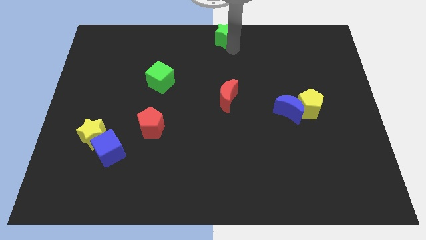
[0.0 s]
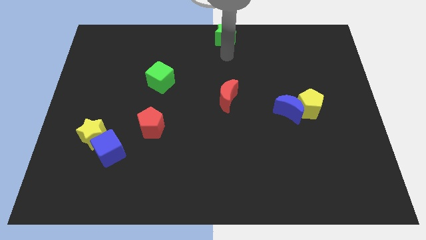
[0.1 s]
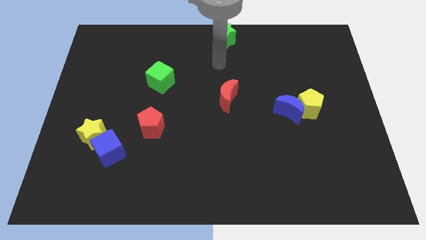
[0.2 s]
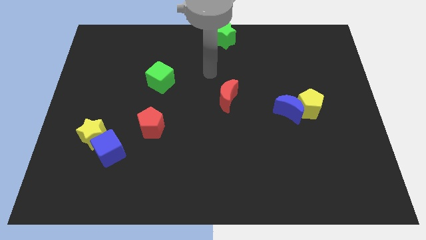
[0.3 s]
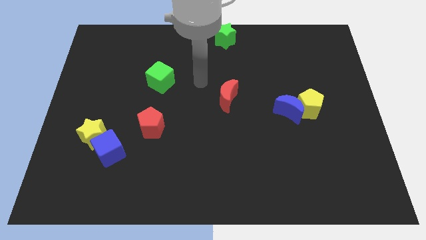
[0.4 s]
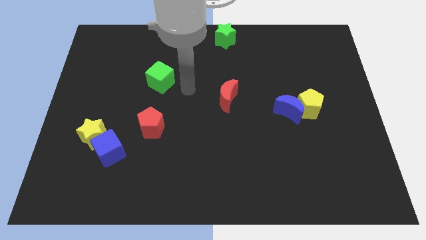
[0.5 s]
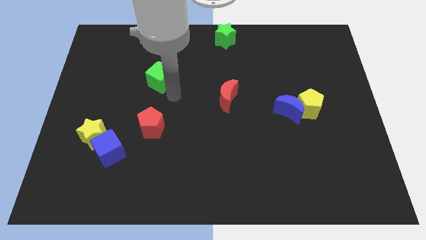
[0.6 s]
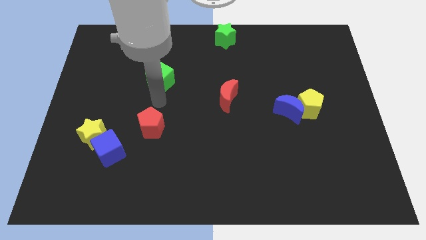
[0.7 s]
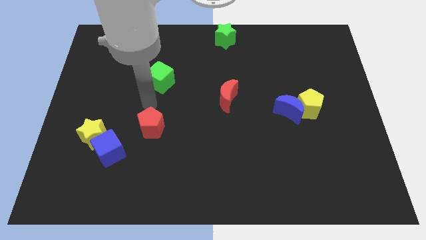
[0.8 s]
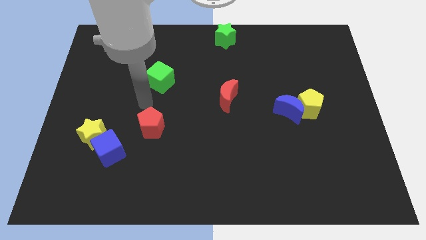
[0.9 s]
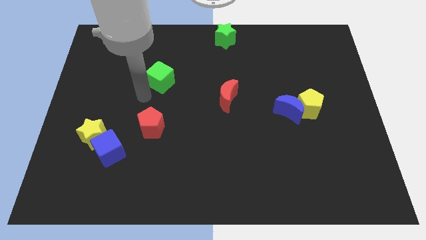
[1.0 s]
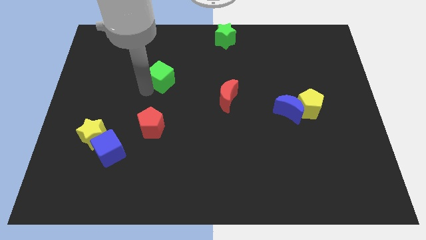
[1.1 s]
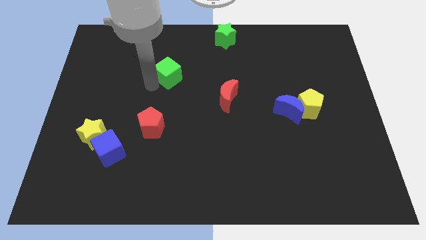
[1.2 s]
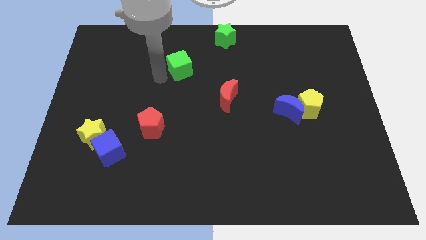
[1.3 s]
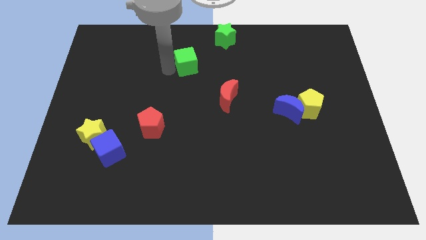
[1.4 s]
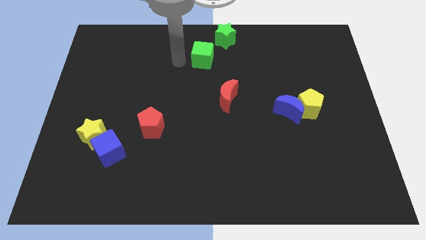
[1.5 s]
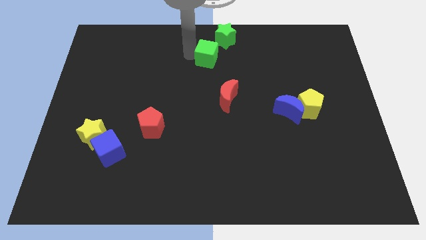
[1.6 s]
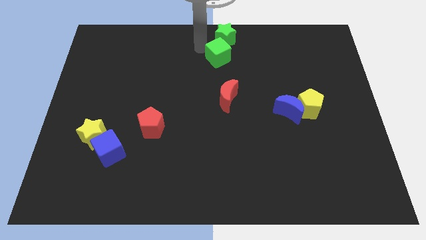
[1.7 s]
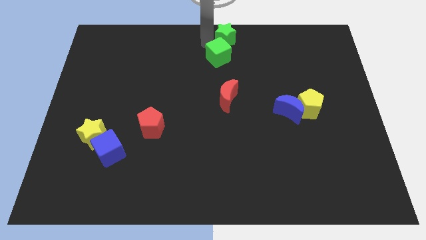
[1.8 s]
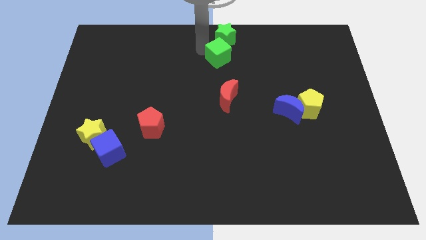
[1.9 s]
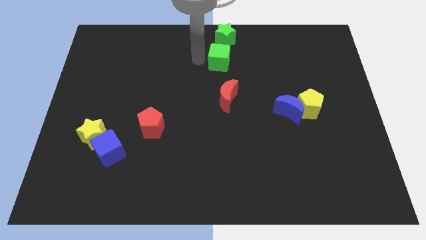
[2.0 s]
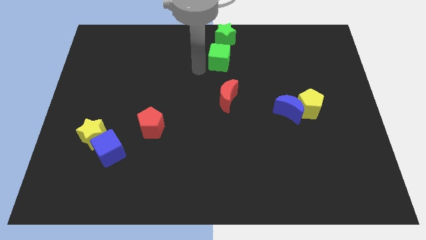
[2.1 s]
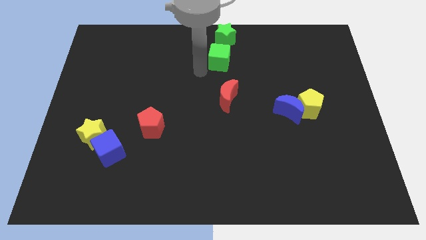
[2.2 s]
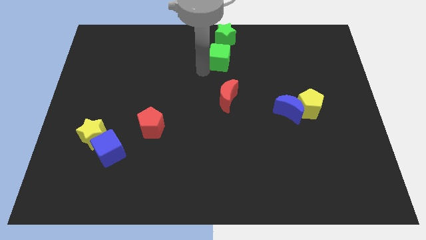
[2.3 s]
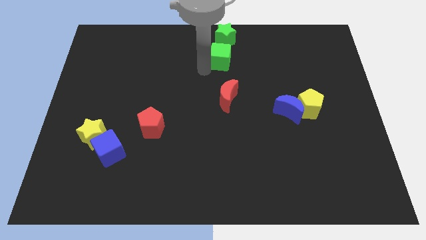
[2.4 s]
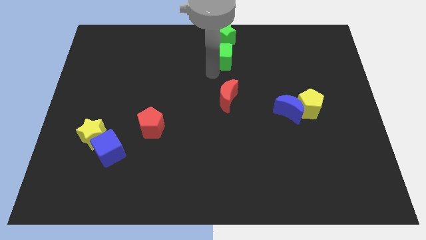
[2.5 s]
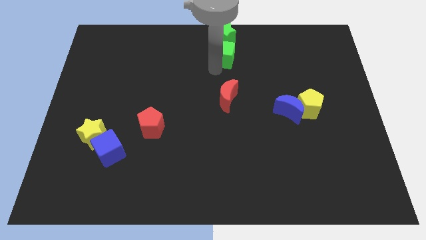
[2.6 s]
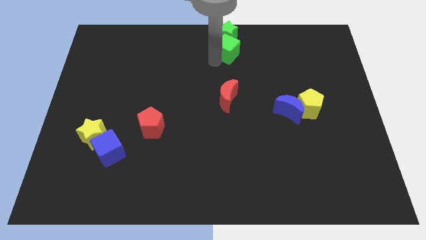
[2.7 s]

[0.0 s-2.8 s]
place green cube to the bottom of green star

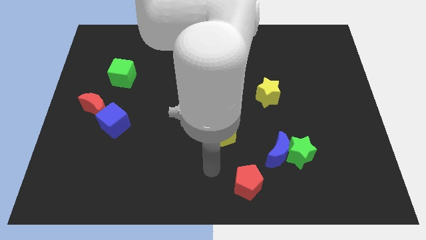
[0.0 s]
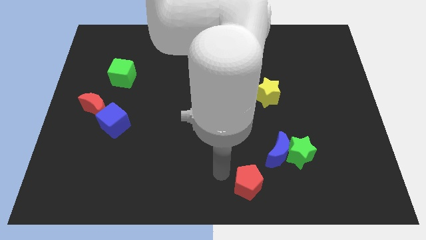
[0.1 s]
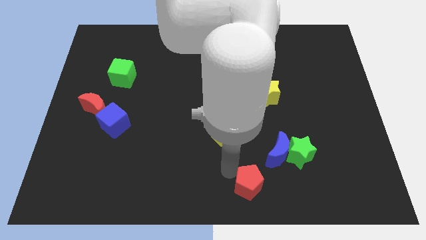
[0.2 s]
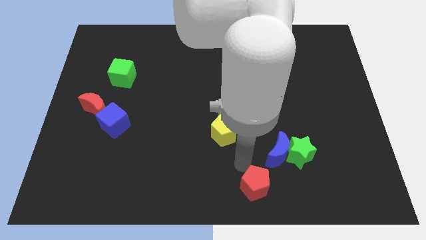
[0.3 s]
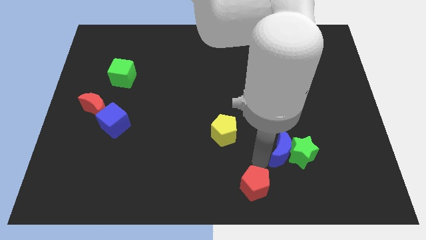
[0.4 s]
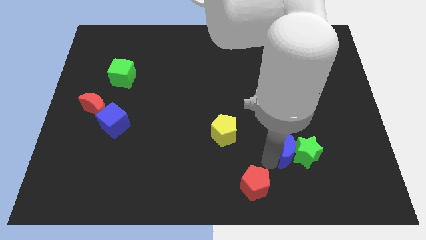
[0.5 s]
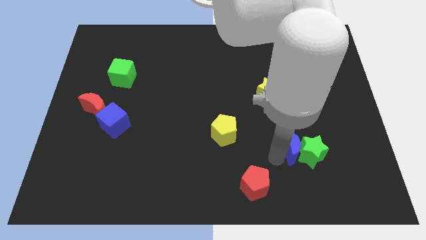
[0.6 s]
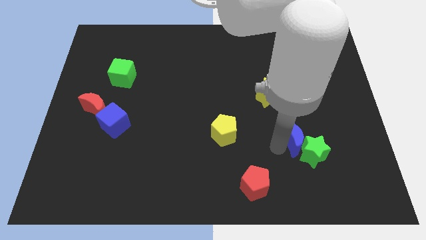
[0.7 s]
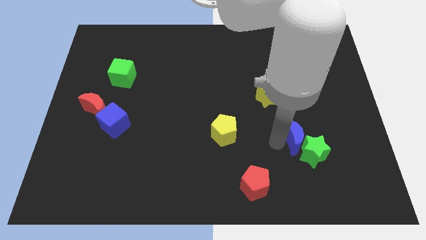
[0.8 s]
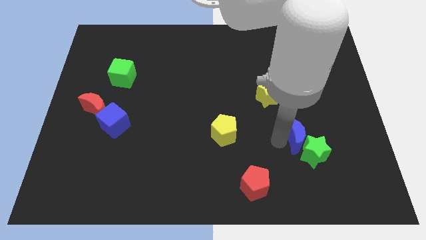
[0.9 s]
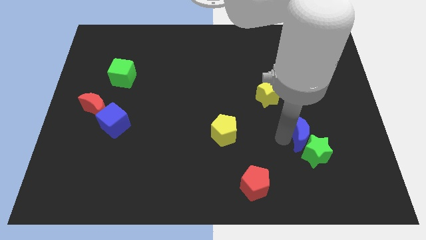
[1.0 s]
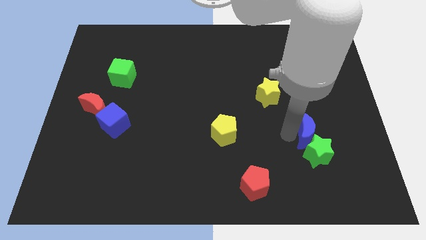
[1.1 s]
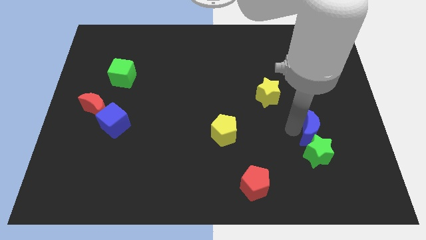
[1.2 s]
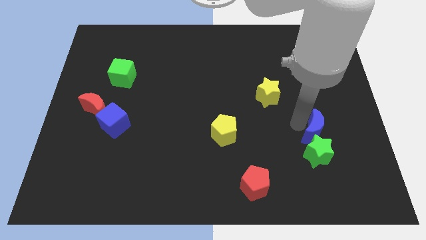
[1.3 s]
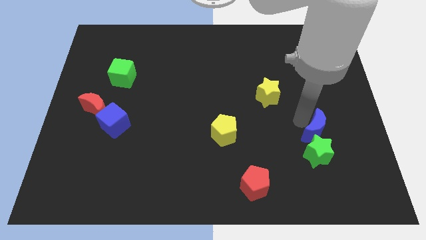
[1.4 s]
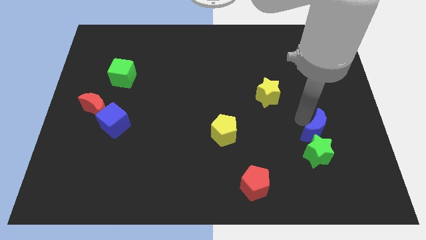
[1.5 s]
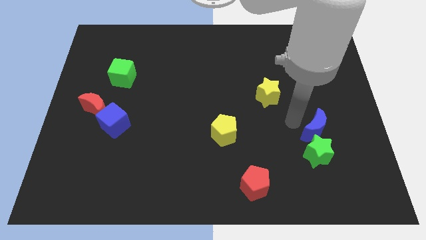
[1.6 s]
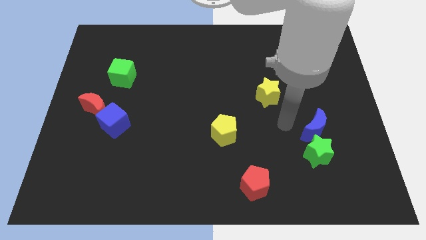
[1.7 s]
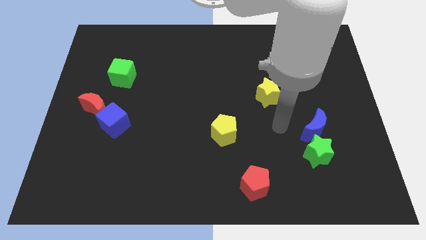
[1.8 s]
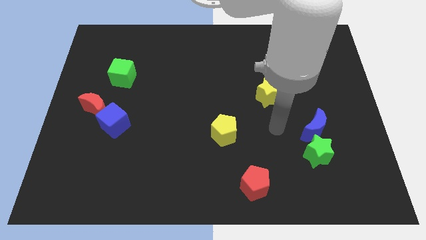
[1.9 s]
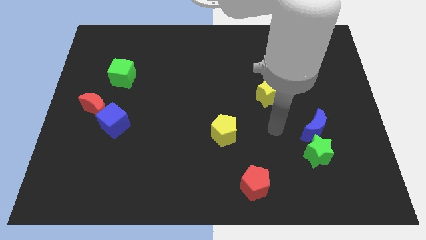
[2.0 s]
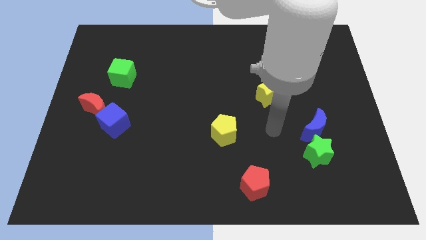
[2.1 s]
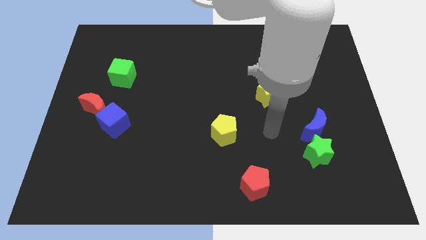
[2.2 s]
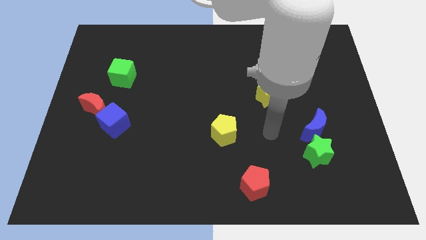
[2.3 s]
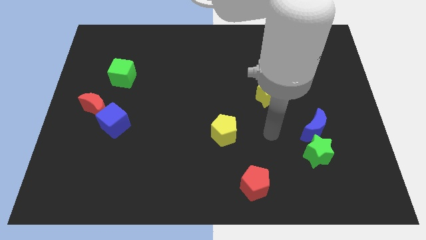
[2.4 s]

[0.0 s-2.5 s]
push blue crescent and green star to left

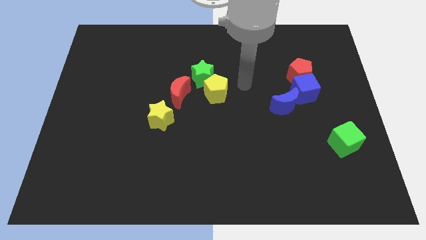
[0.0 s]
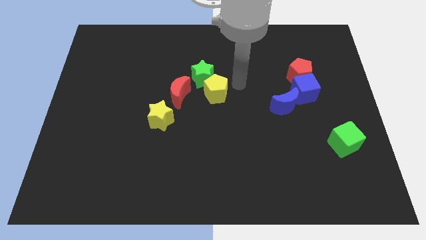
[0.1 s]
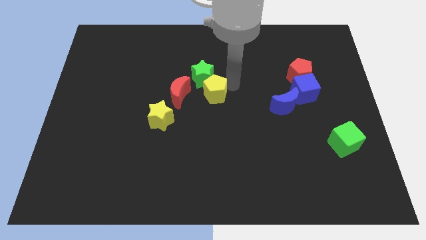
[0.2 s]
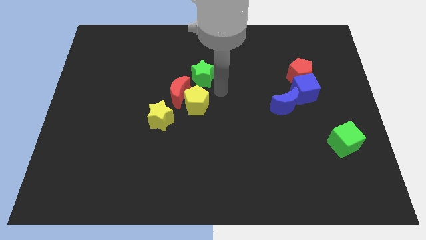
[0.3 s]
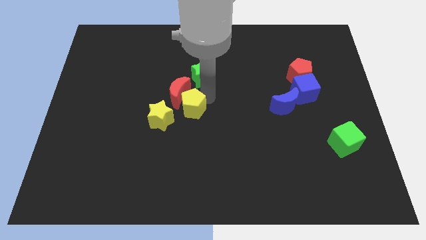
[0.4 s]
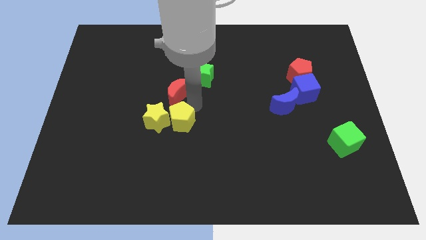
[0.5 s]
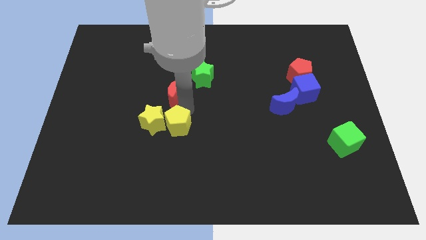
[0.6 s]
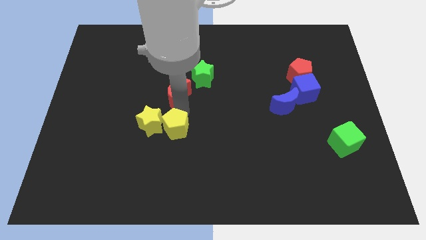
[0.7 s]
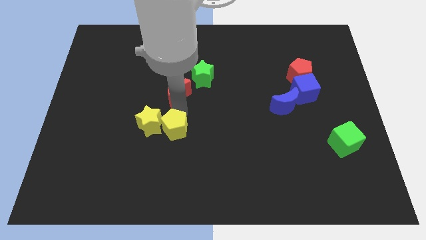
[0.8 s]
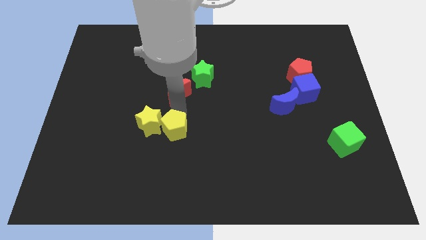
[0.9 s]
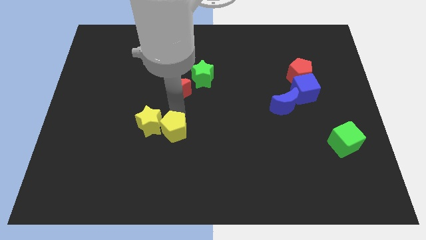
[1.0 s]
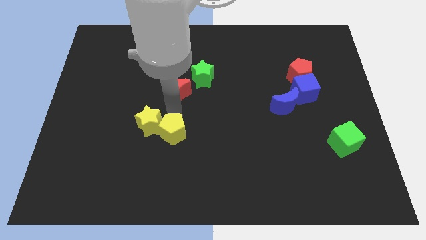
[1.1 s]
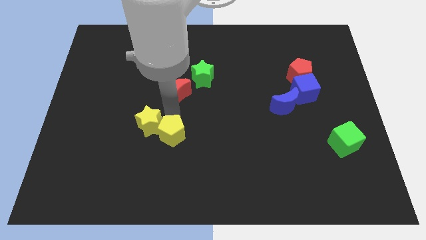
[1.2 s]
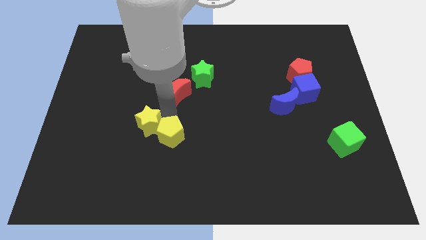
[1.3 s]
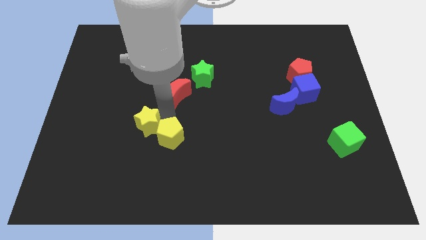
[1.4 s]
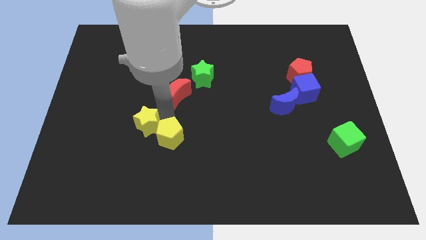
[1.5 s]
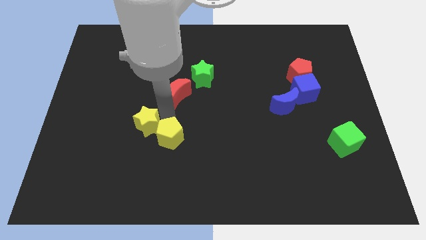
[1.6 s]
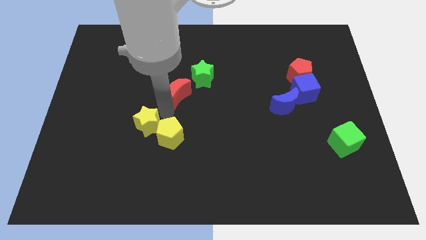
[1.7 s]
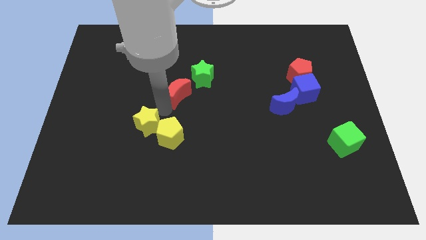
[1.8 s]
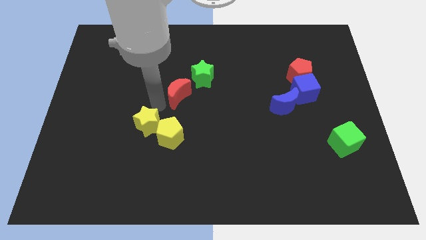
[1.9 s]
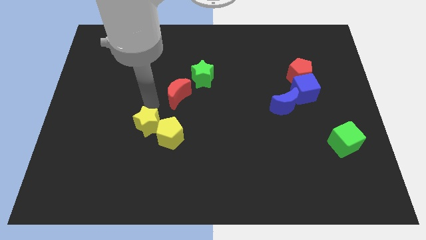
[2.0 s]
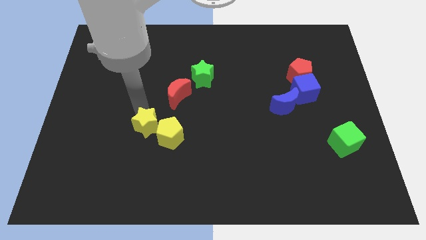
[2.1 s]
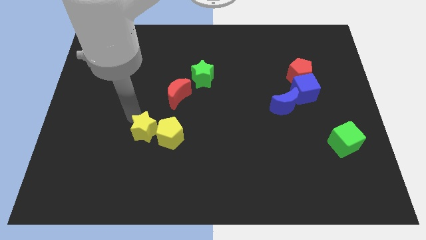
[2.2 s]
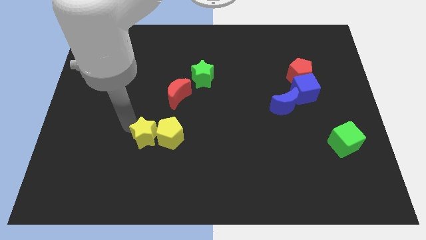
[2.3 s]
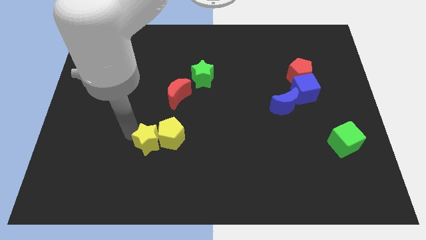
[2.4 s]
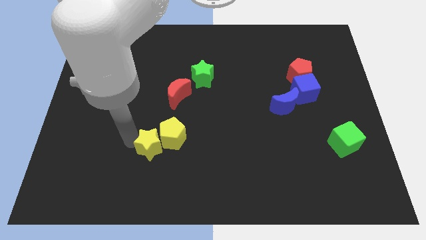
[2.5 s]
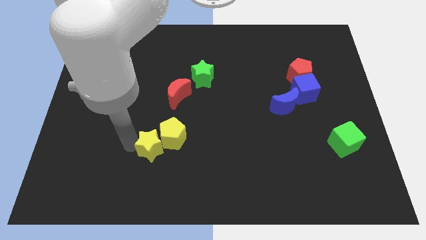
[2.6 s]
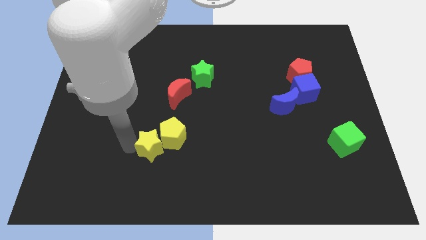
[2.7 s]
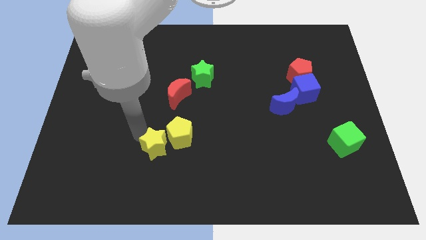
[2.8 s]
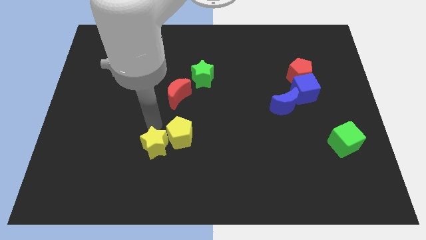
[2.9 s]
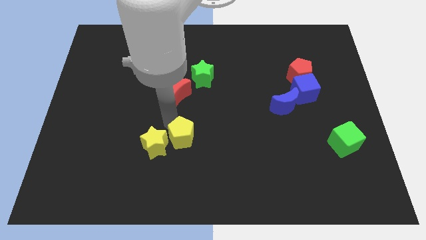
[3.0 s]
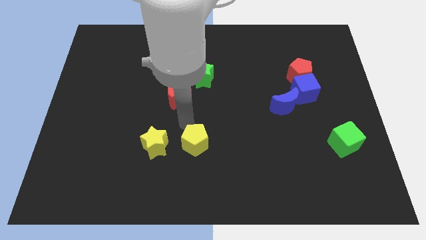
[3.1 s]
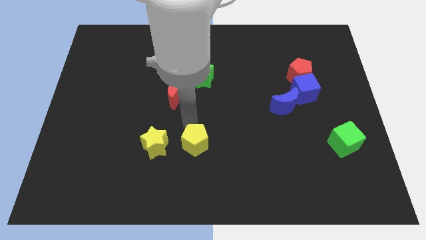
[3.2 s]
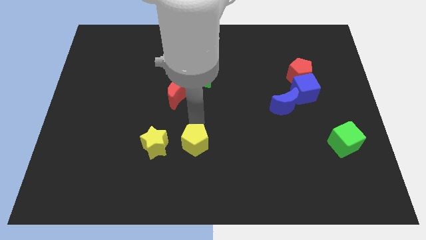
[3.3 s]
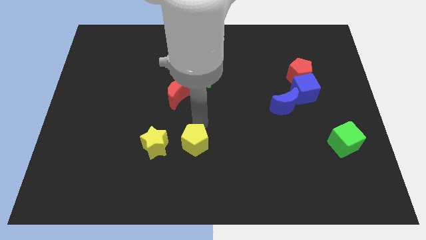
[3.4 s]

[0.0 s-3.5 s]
push the yellow blocks towards the bottom side of the board
